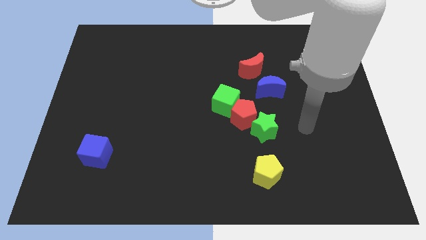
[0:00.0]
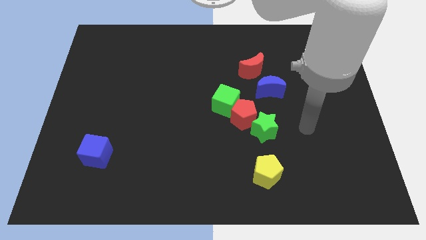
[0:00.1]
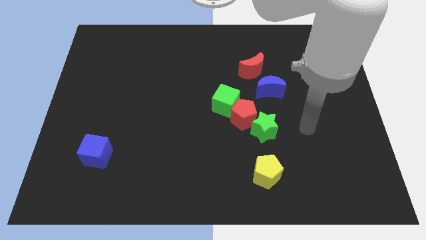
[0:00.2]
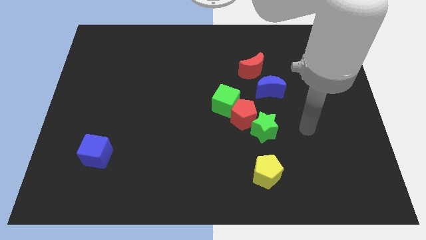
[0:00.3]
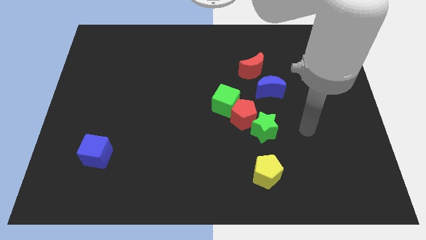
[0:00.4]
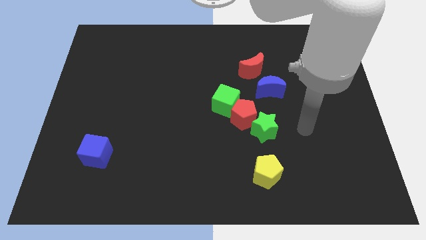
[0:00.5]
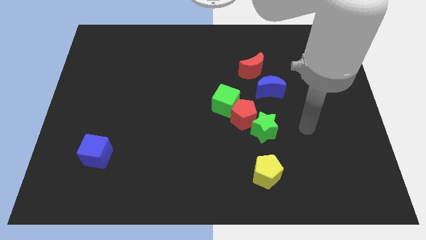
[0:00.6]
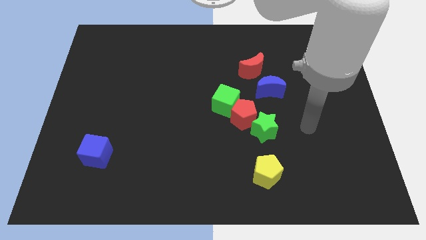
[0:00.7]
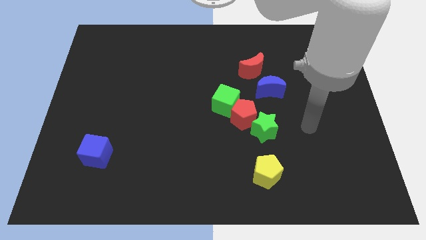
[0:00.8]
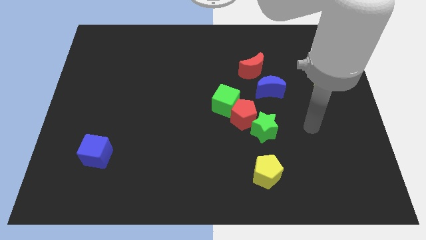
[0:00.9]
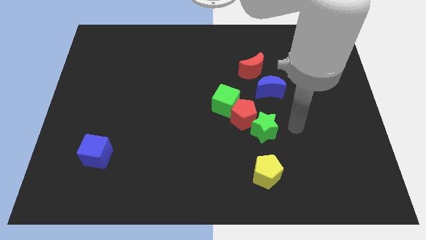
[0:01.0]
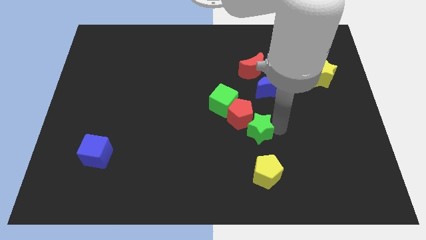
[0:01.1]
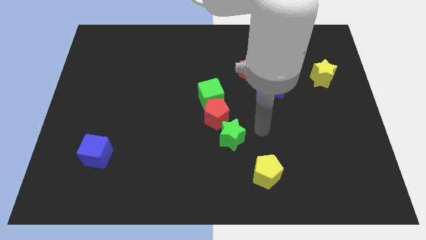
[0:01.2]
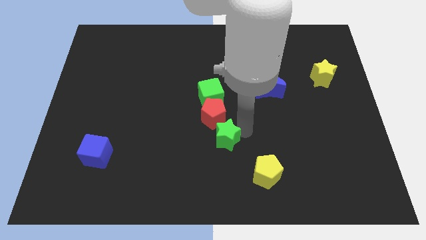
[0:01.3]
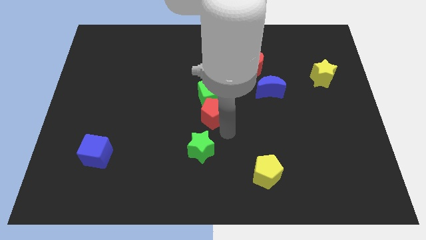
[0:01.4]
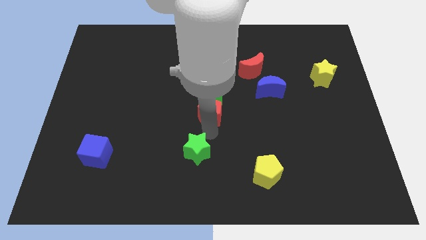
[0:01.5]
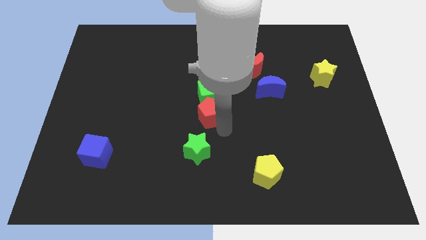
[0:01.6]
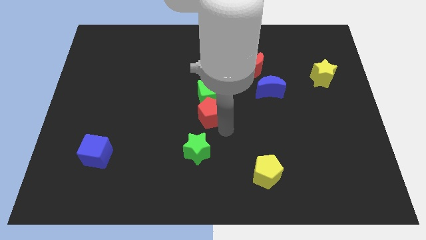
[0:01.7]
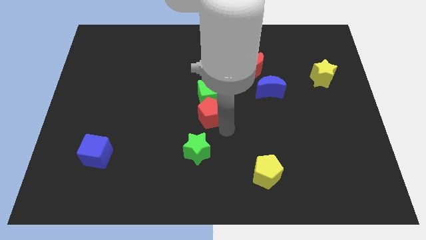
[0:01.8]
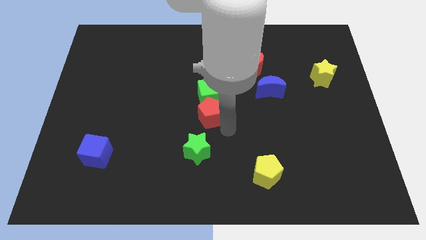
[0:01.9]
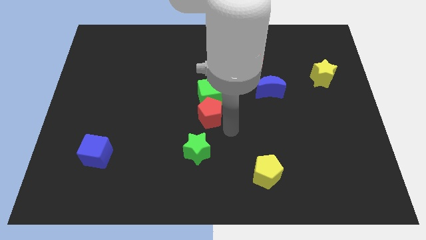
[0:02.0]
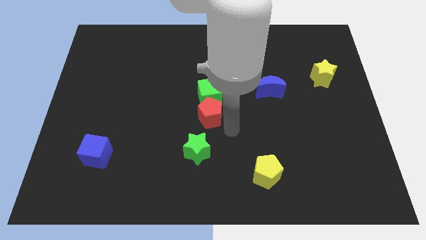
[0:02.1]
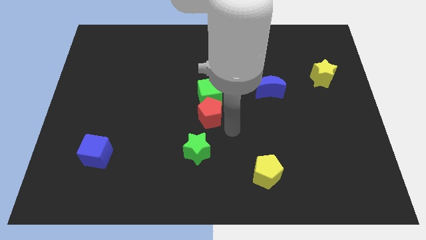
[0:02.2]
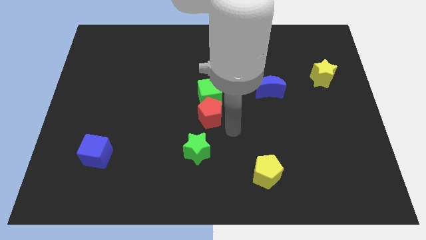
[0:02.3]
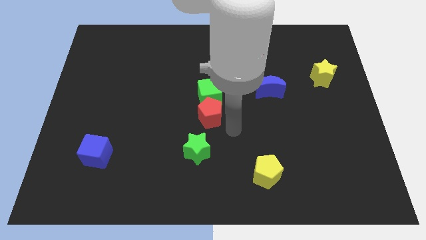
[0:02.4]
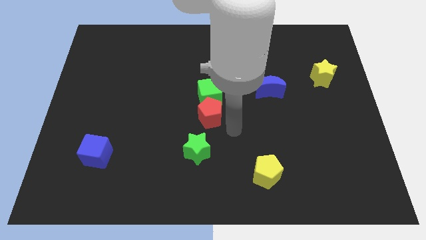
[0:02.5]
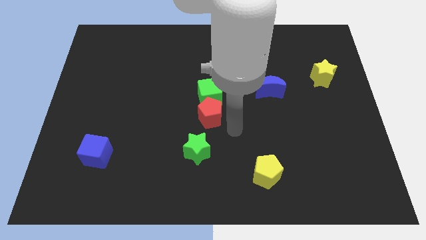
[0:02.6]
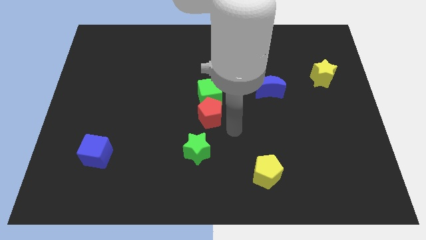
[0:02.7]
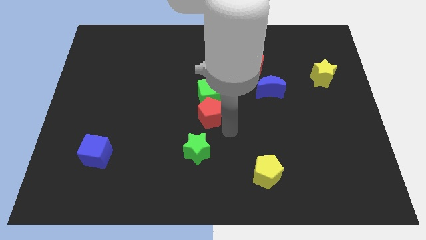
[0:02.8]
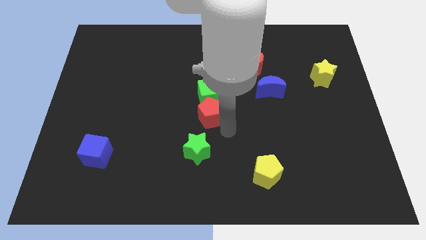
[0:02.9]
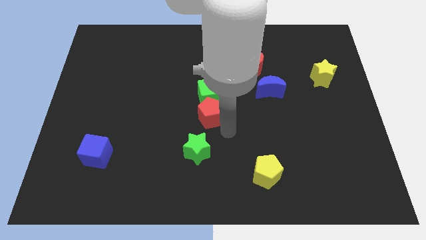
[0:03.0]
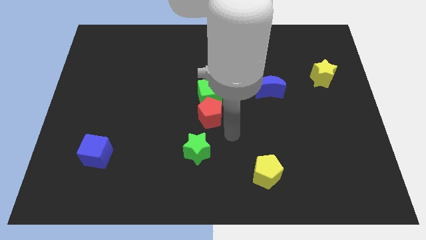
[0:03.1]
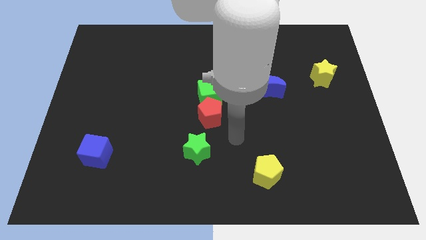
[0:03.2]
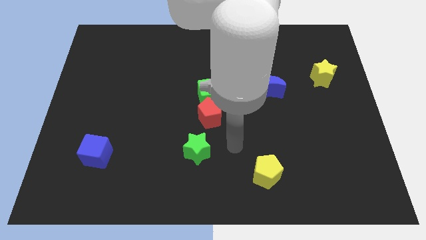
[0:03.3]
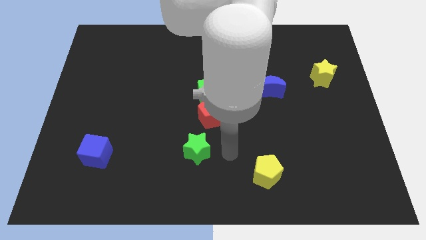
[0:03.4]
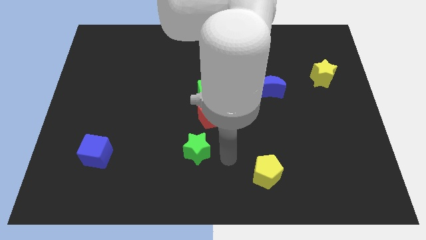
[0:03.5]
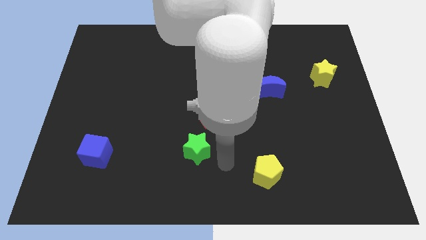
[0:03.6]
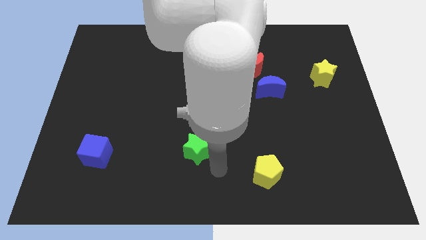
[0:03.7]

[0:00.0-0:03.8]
slightly move the green star to the bottom

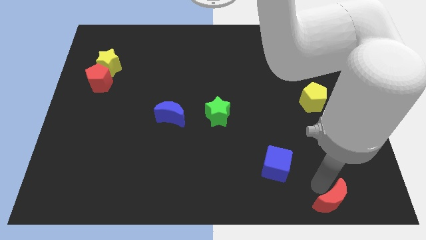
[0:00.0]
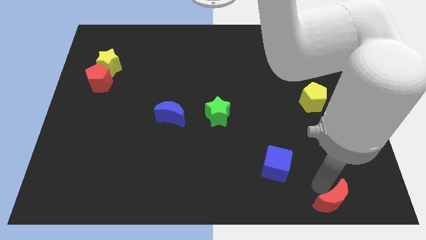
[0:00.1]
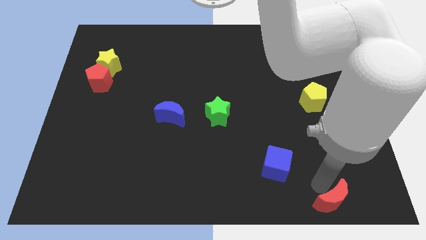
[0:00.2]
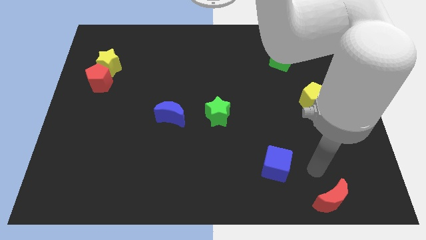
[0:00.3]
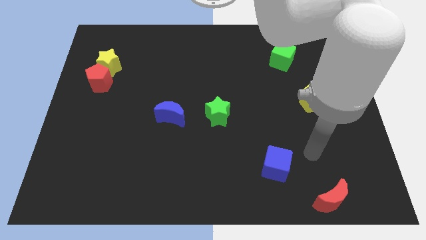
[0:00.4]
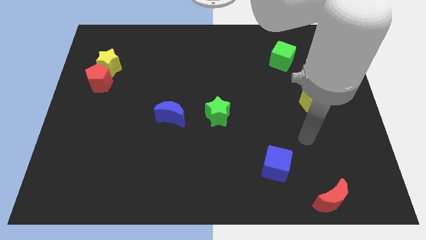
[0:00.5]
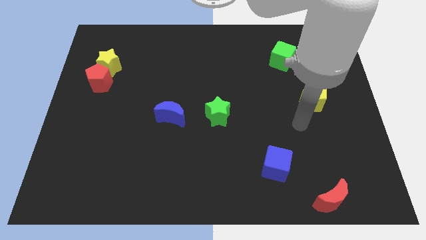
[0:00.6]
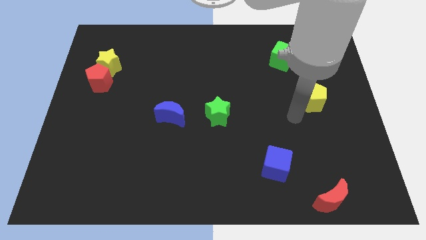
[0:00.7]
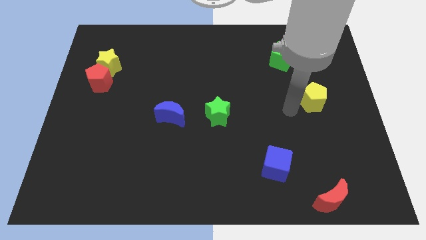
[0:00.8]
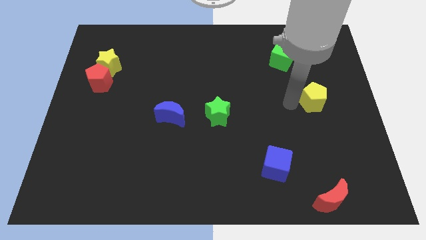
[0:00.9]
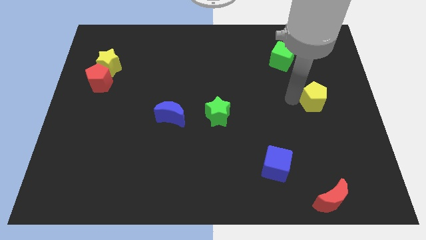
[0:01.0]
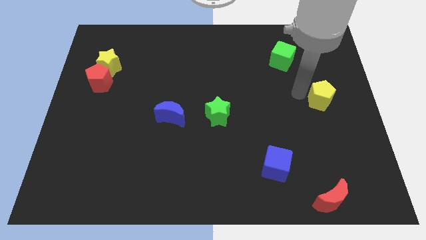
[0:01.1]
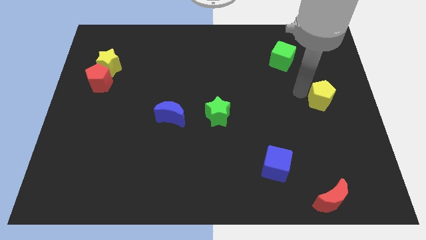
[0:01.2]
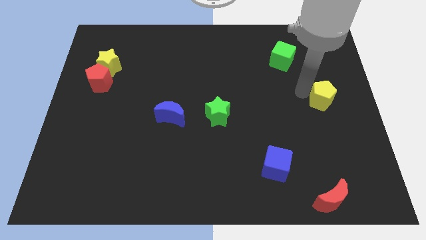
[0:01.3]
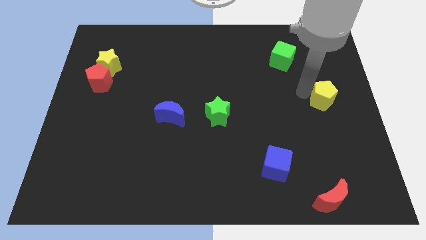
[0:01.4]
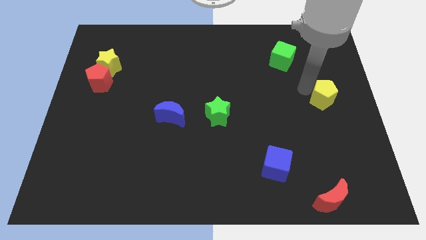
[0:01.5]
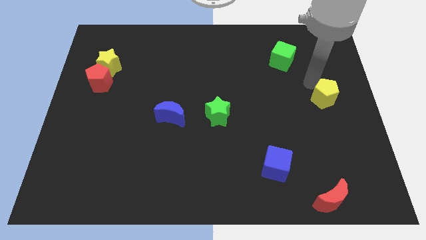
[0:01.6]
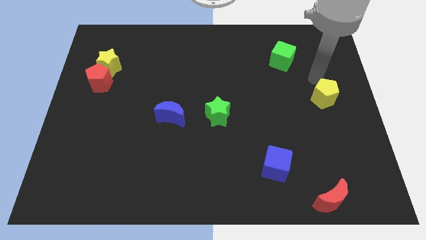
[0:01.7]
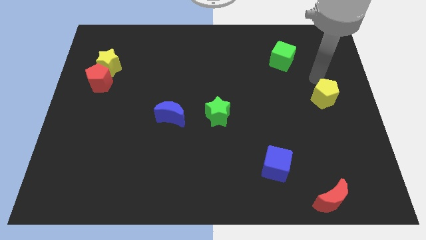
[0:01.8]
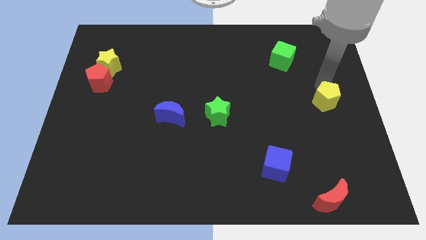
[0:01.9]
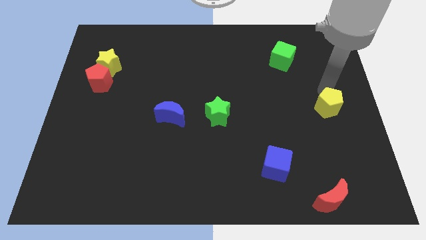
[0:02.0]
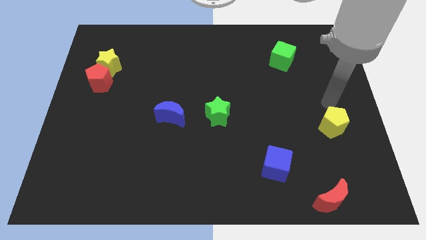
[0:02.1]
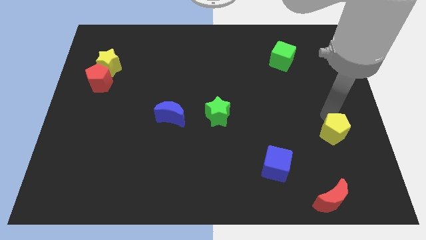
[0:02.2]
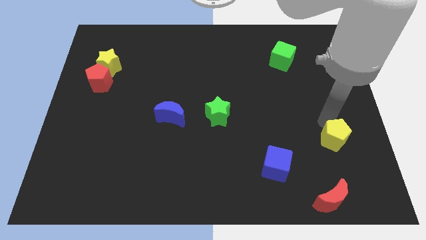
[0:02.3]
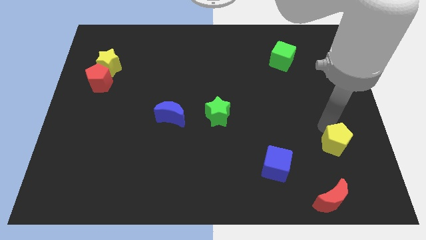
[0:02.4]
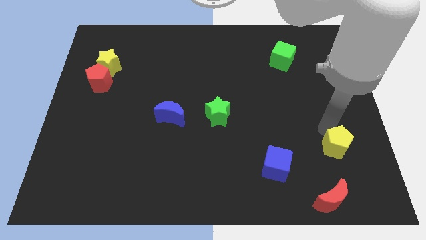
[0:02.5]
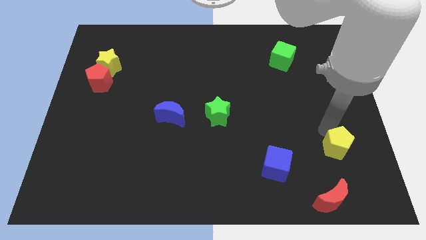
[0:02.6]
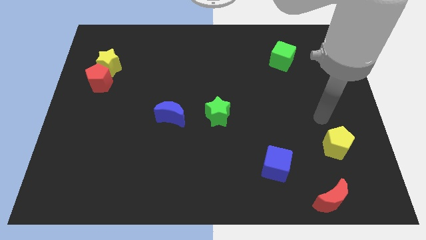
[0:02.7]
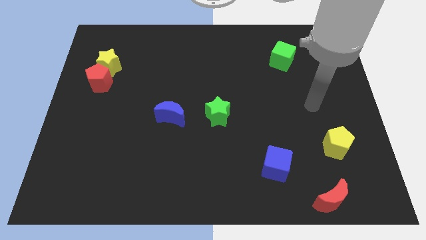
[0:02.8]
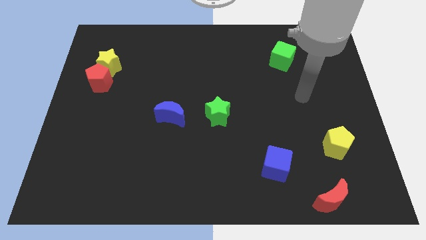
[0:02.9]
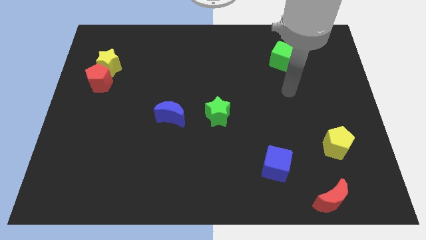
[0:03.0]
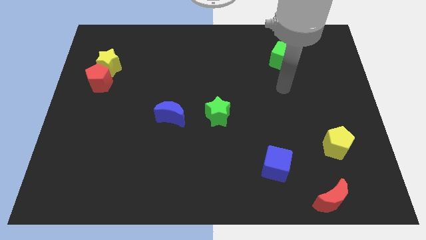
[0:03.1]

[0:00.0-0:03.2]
push yellow pentagon to the bottom side

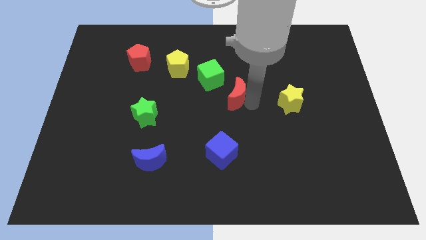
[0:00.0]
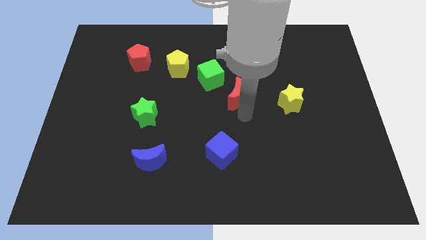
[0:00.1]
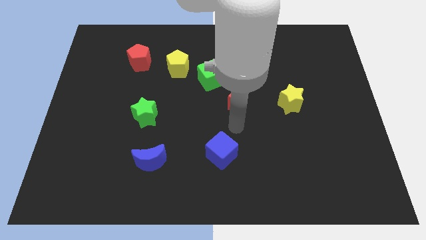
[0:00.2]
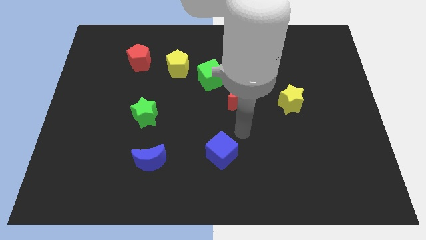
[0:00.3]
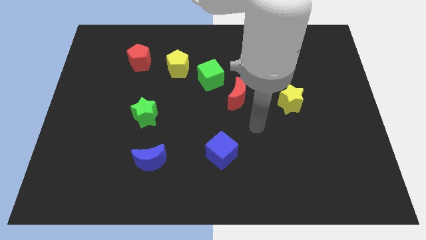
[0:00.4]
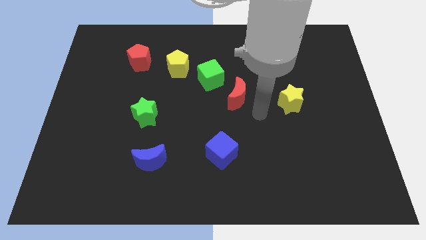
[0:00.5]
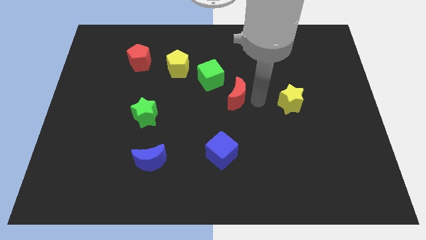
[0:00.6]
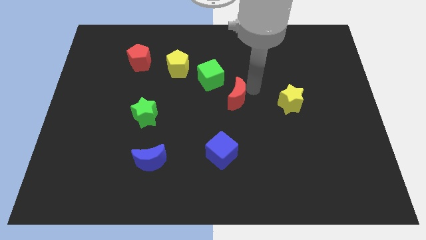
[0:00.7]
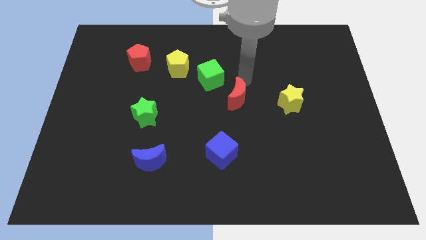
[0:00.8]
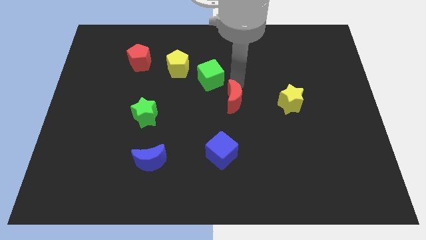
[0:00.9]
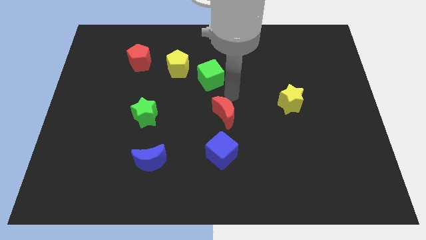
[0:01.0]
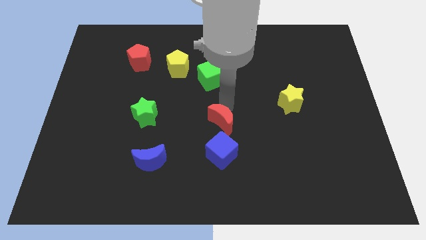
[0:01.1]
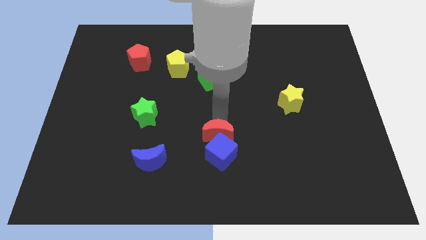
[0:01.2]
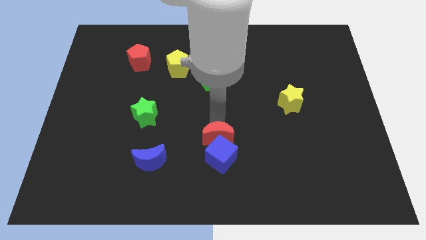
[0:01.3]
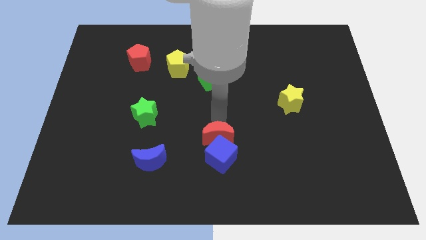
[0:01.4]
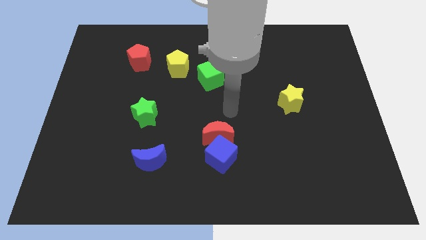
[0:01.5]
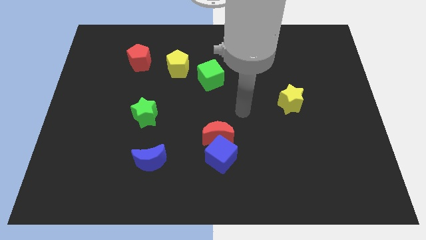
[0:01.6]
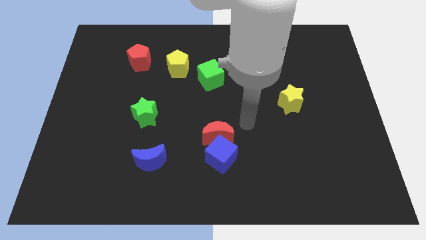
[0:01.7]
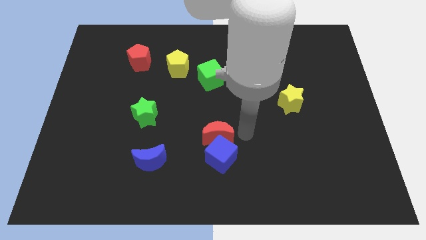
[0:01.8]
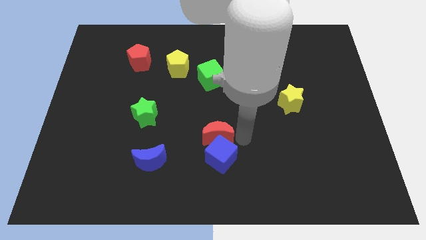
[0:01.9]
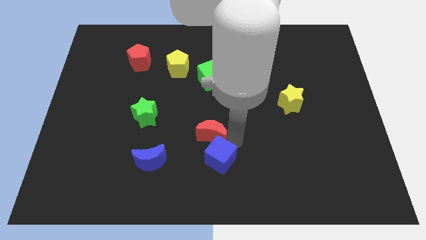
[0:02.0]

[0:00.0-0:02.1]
place the red crescent at the top of the blue cube
